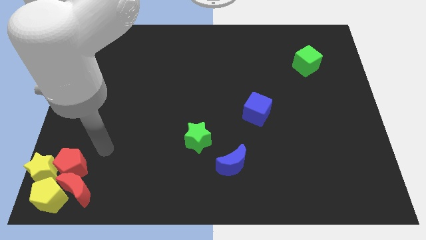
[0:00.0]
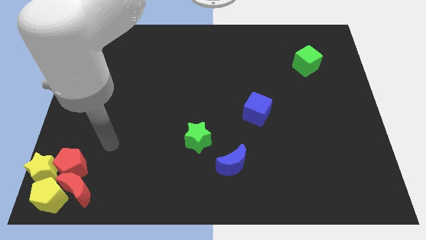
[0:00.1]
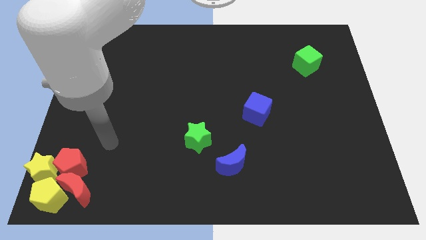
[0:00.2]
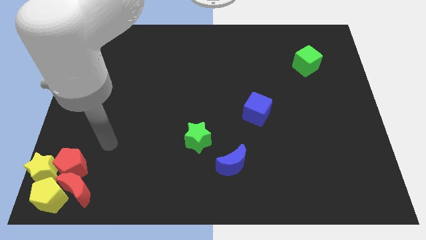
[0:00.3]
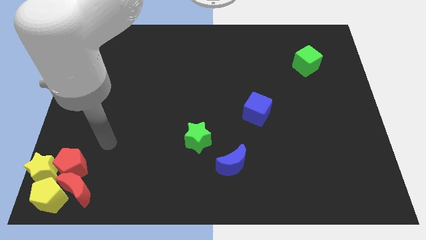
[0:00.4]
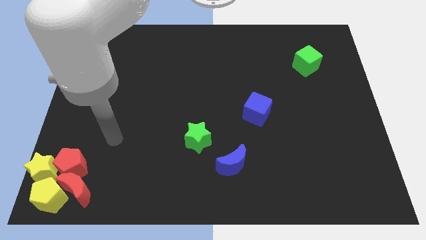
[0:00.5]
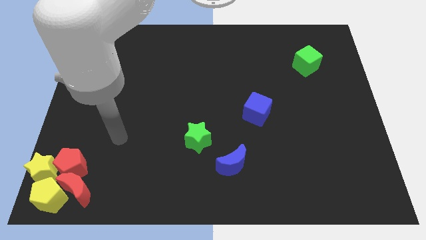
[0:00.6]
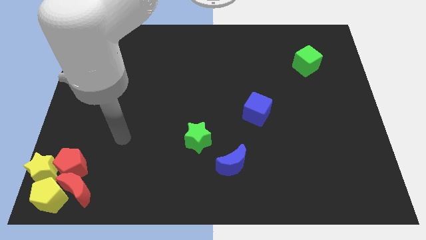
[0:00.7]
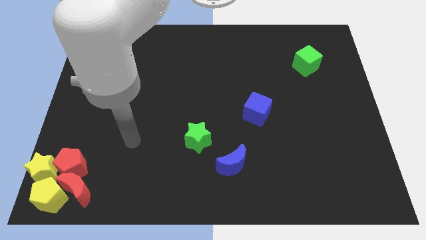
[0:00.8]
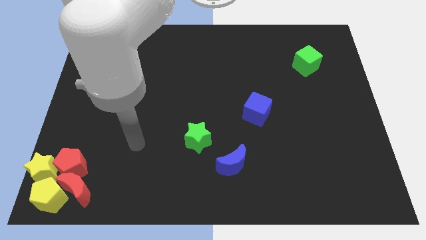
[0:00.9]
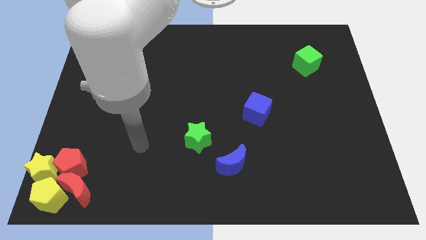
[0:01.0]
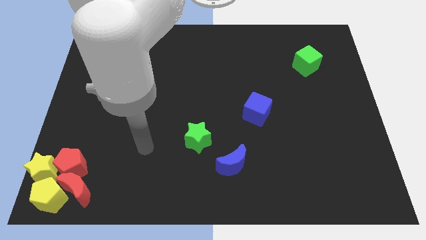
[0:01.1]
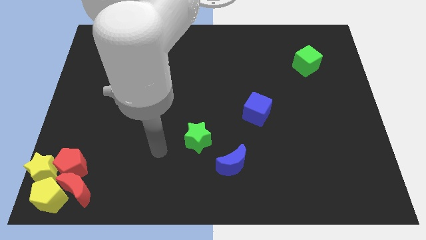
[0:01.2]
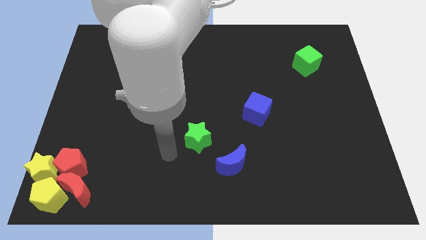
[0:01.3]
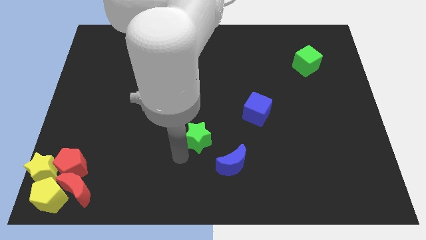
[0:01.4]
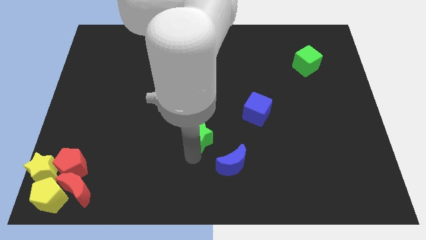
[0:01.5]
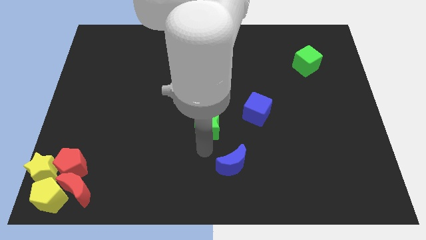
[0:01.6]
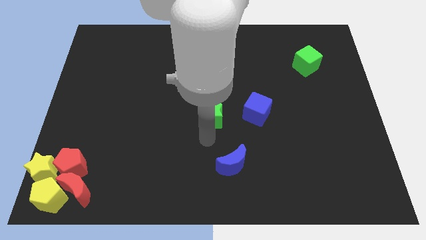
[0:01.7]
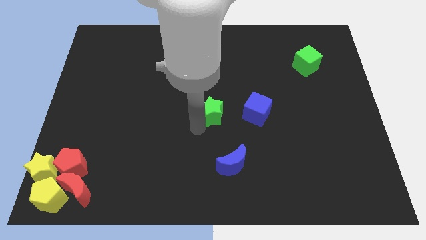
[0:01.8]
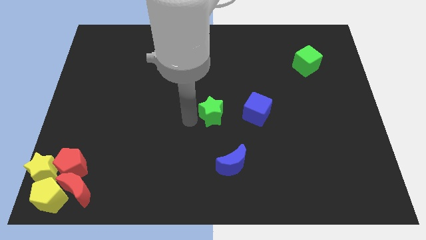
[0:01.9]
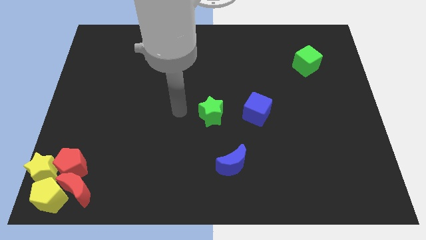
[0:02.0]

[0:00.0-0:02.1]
place the green star left to the blue cube

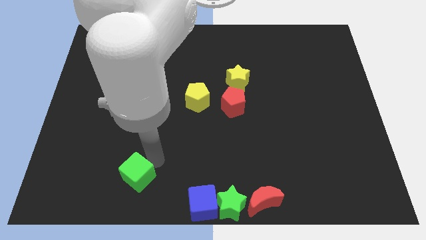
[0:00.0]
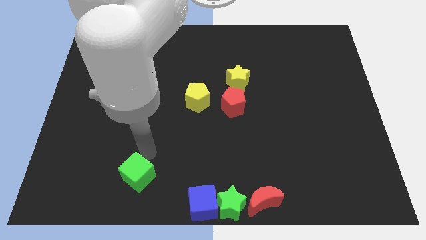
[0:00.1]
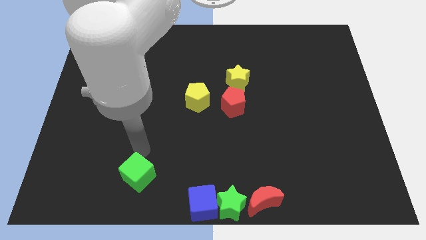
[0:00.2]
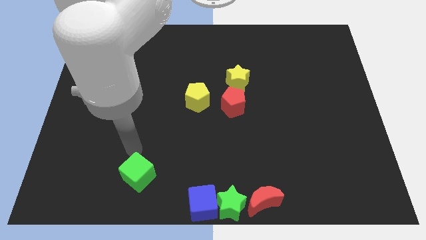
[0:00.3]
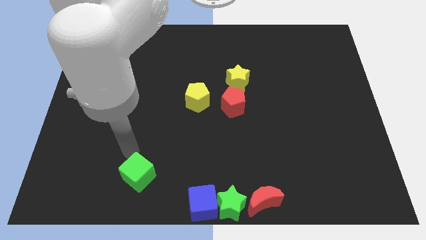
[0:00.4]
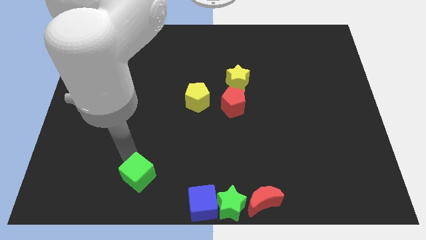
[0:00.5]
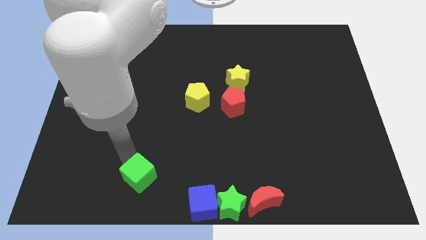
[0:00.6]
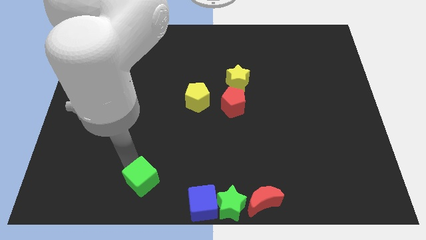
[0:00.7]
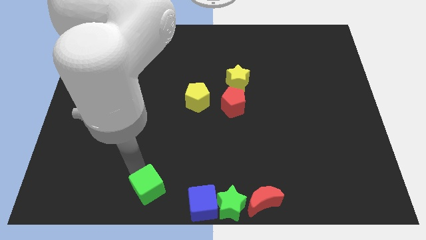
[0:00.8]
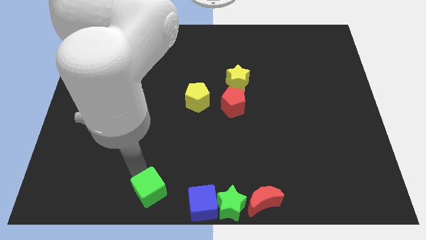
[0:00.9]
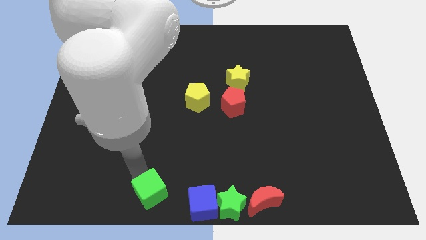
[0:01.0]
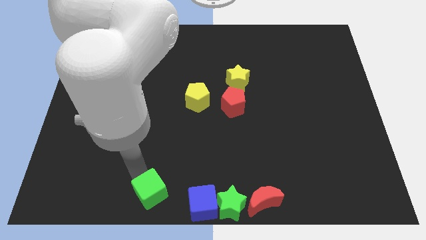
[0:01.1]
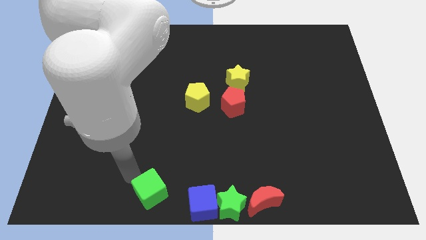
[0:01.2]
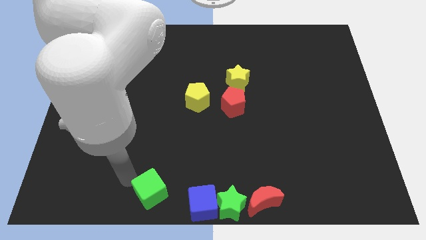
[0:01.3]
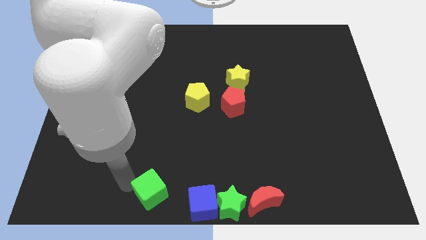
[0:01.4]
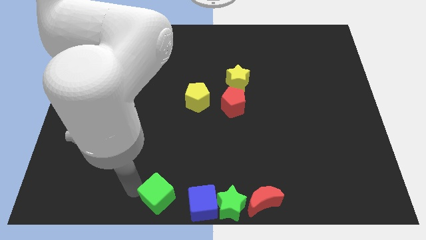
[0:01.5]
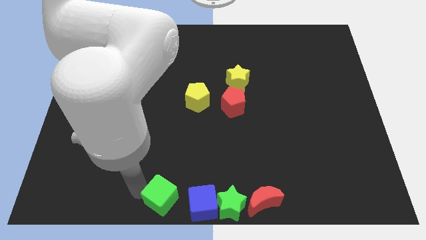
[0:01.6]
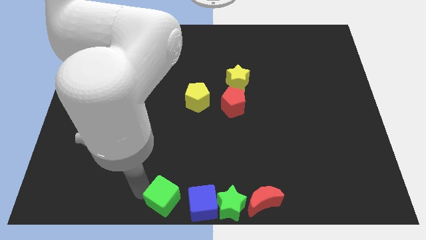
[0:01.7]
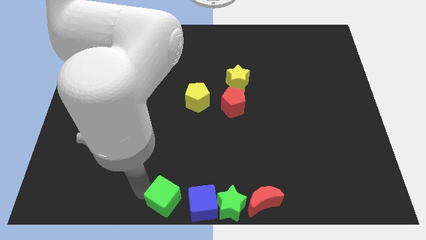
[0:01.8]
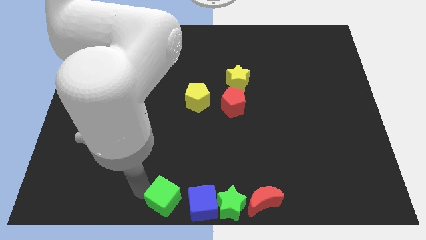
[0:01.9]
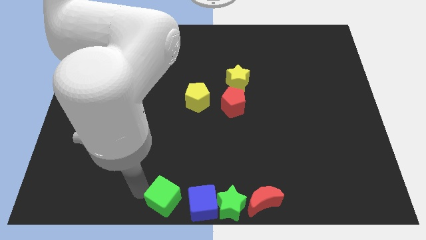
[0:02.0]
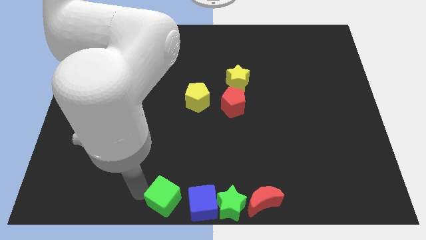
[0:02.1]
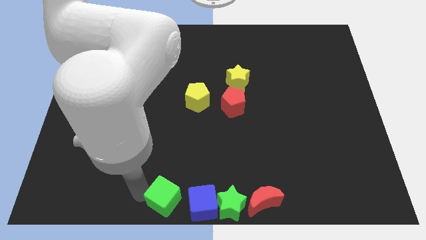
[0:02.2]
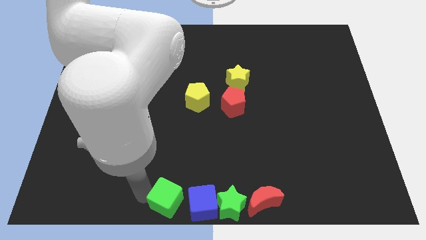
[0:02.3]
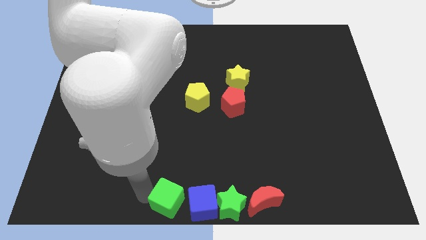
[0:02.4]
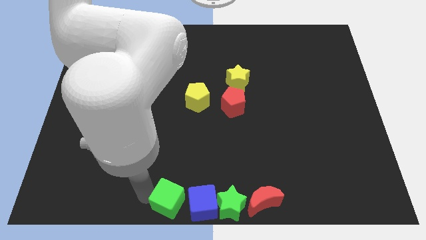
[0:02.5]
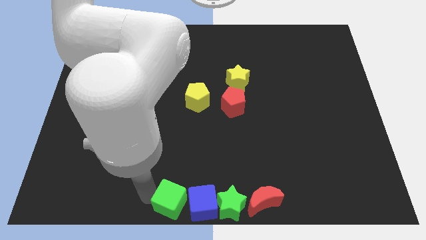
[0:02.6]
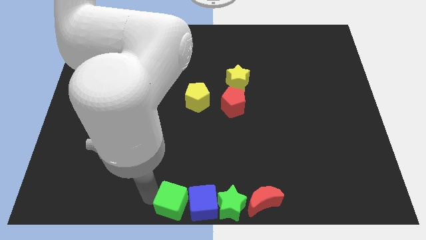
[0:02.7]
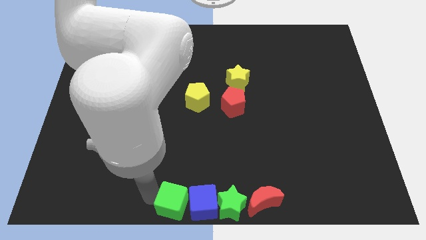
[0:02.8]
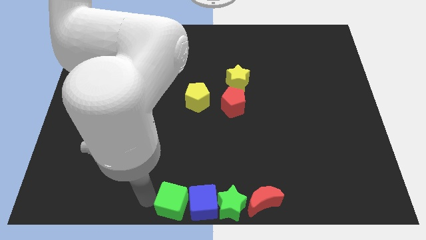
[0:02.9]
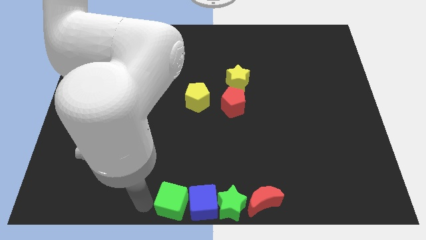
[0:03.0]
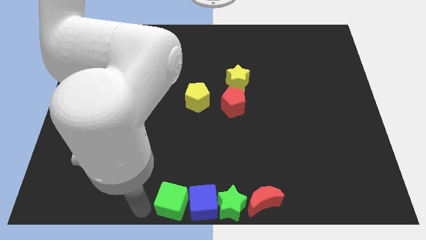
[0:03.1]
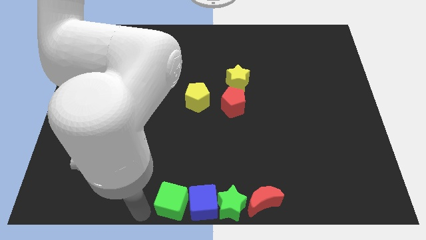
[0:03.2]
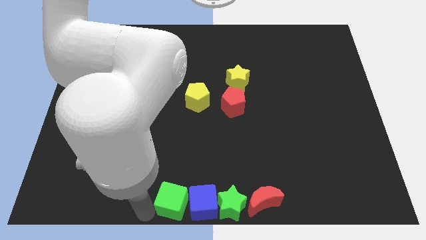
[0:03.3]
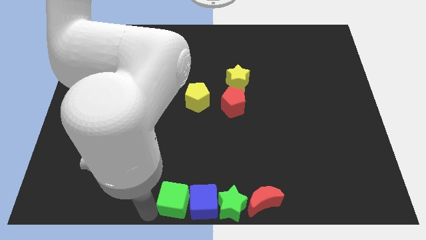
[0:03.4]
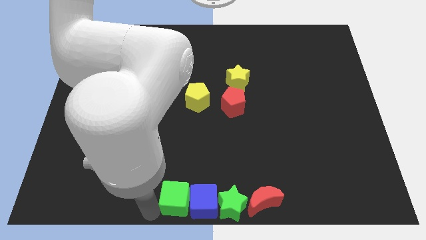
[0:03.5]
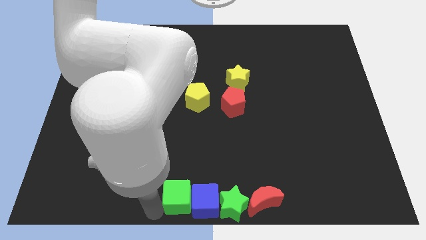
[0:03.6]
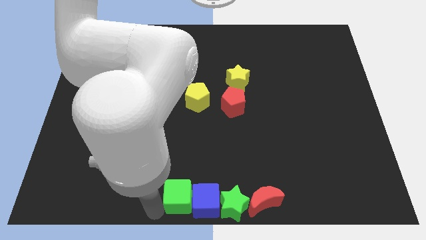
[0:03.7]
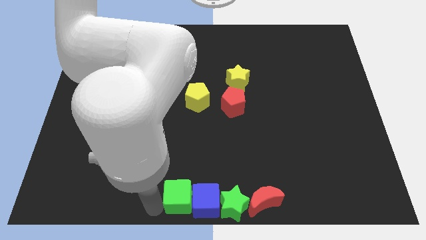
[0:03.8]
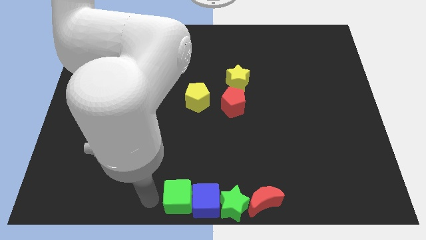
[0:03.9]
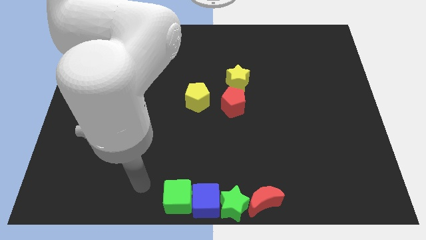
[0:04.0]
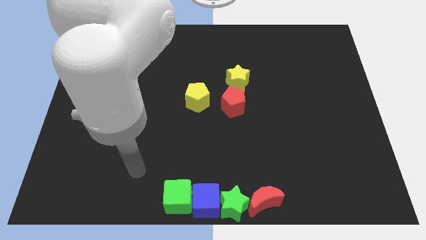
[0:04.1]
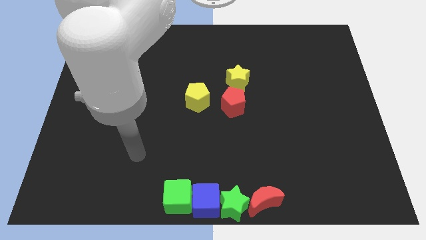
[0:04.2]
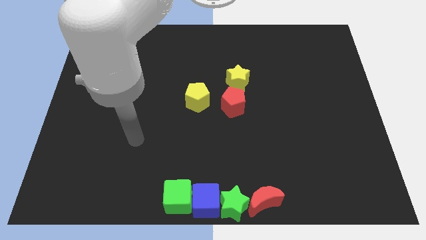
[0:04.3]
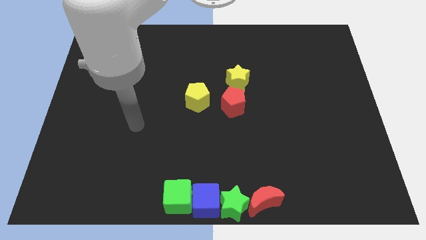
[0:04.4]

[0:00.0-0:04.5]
push the blue cube into the green star

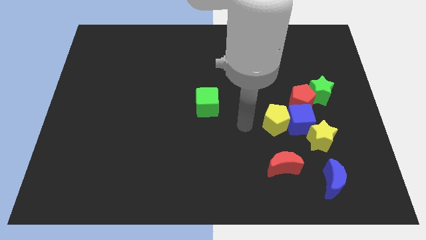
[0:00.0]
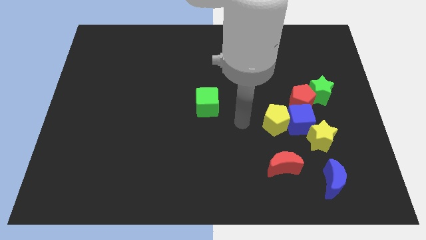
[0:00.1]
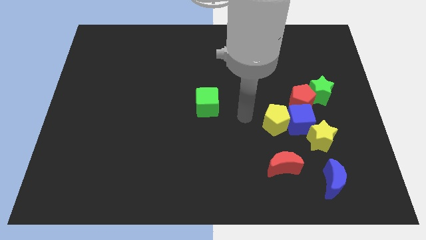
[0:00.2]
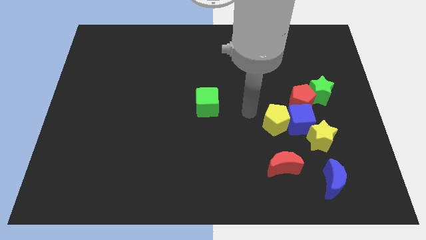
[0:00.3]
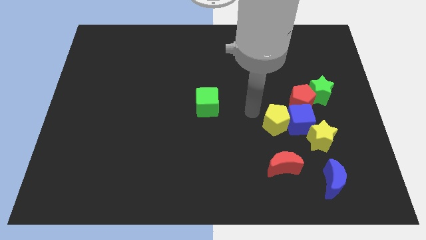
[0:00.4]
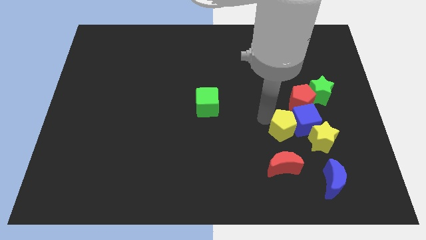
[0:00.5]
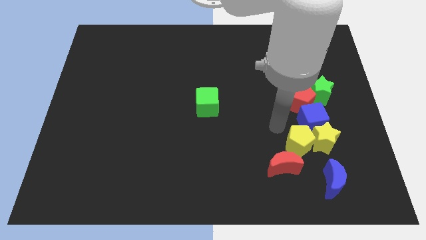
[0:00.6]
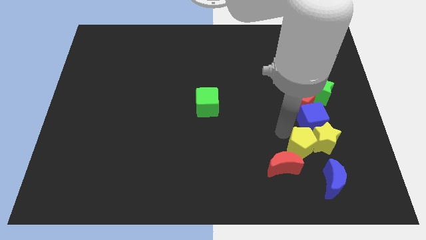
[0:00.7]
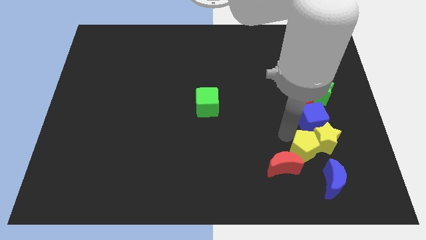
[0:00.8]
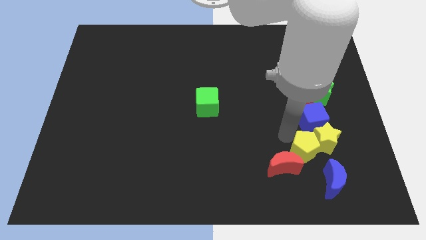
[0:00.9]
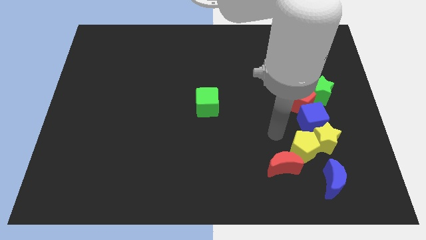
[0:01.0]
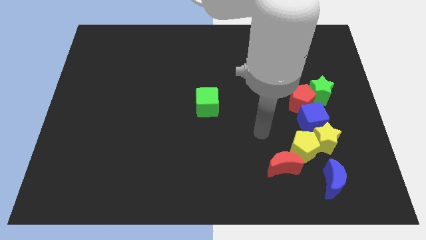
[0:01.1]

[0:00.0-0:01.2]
push the yellow pentagon to the left of the yellow star

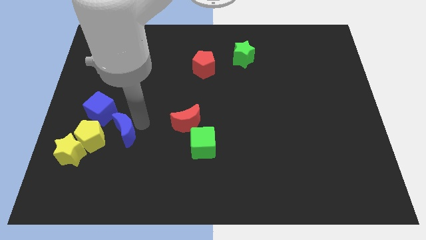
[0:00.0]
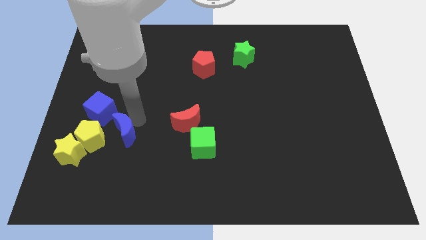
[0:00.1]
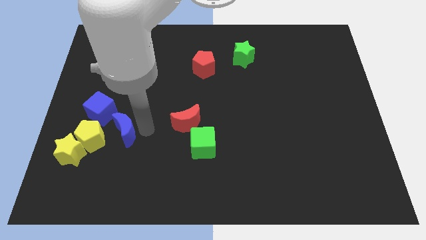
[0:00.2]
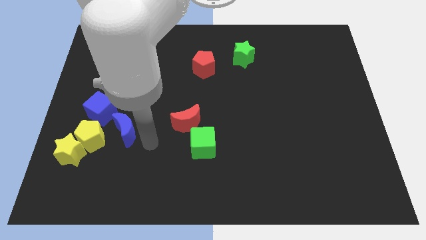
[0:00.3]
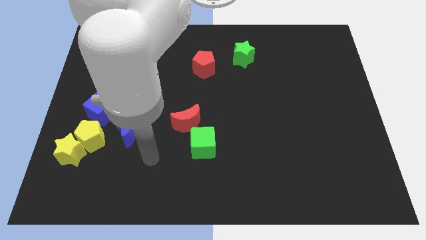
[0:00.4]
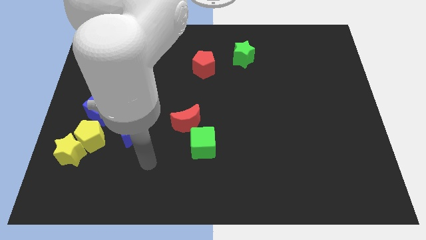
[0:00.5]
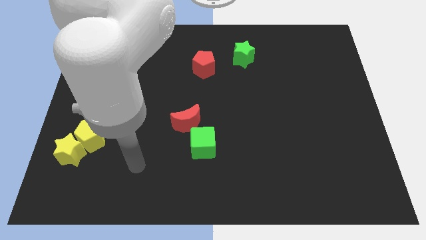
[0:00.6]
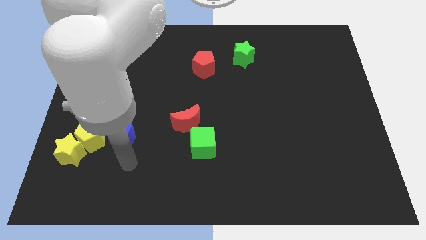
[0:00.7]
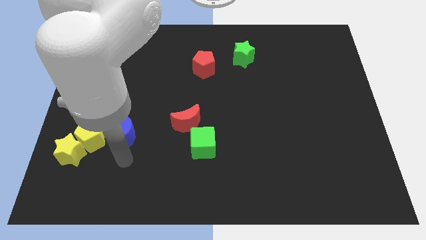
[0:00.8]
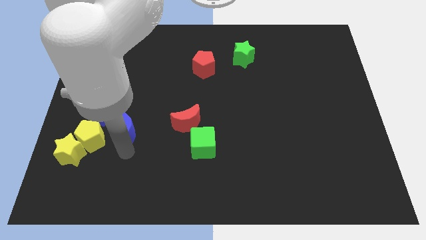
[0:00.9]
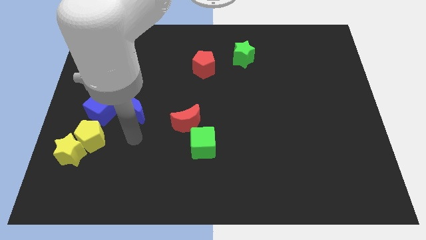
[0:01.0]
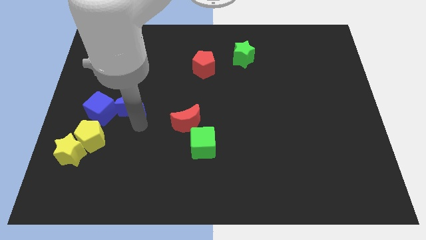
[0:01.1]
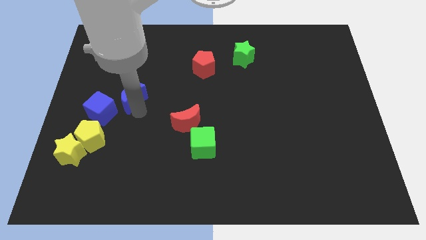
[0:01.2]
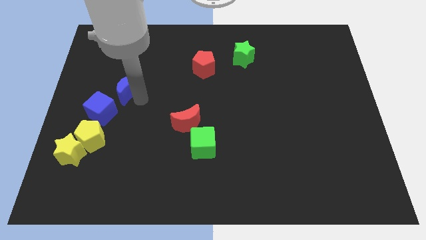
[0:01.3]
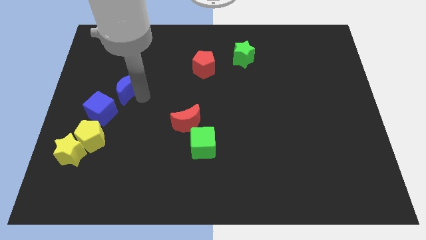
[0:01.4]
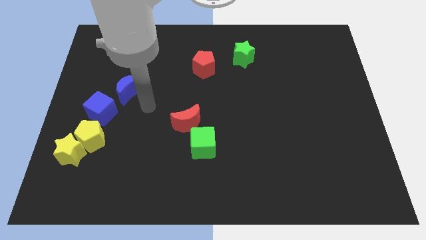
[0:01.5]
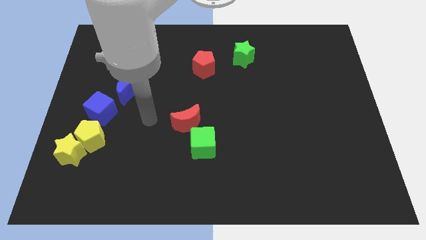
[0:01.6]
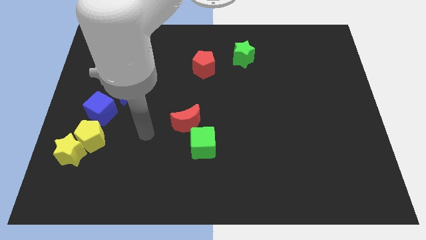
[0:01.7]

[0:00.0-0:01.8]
push the blue moon to the top of blue cube
